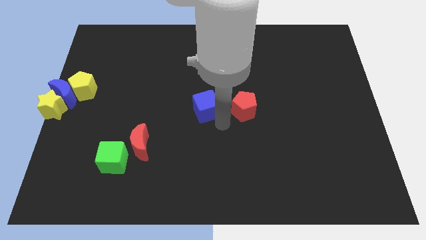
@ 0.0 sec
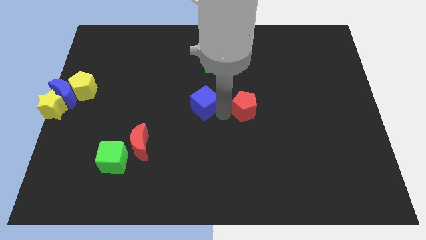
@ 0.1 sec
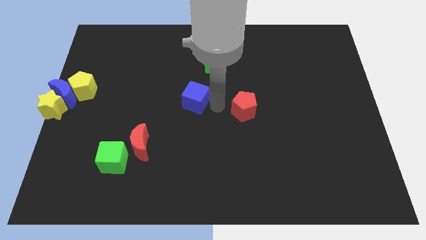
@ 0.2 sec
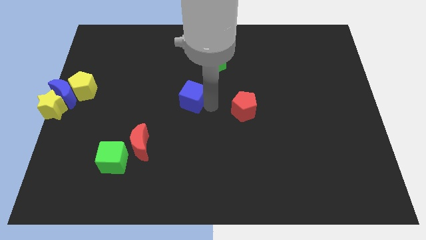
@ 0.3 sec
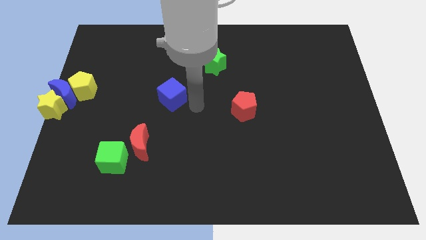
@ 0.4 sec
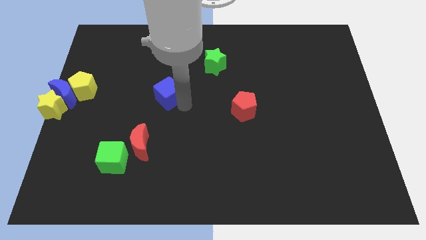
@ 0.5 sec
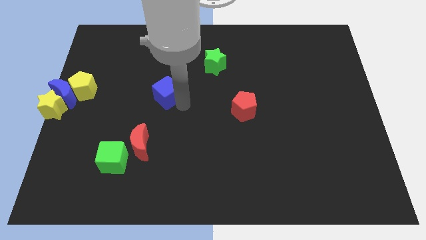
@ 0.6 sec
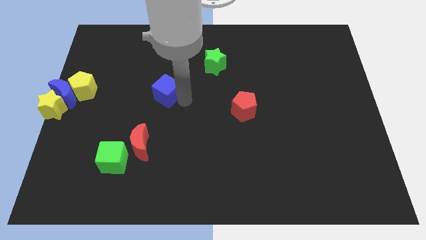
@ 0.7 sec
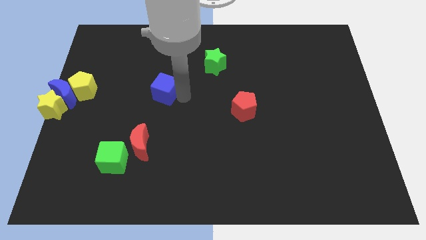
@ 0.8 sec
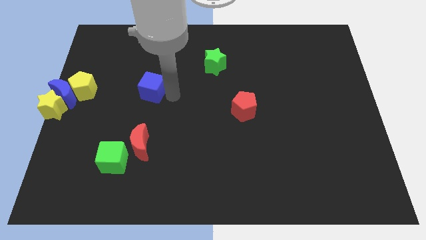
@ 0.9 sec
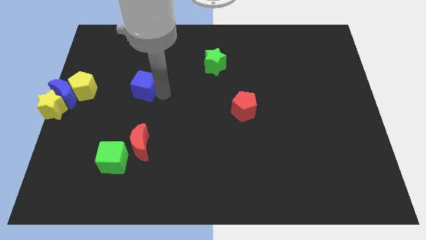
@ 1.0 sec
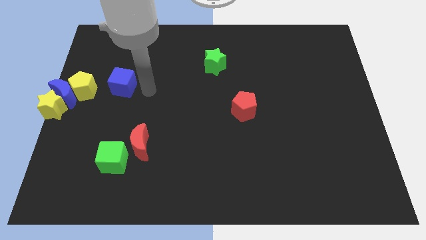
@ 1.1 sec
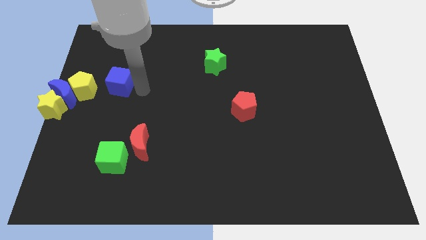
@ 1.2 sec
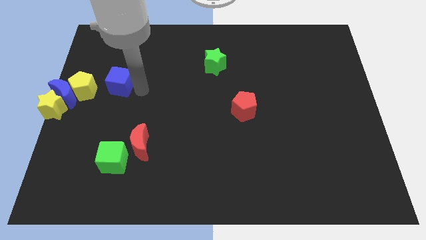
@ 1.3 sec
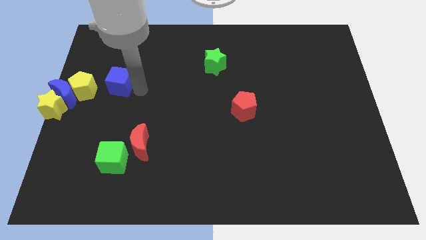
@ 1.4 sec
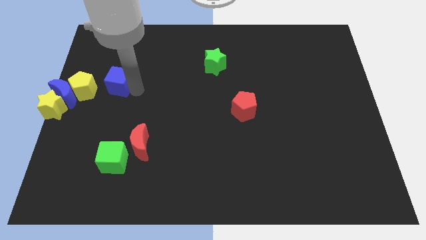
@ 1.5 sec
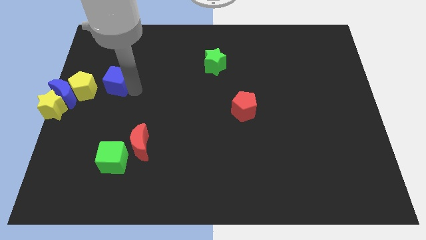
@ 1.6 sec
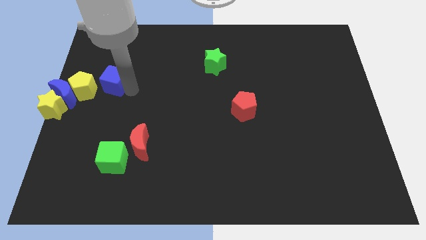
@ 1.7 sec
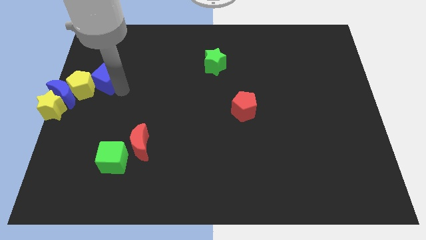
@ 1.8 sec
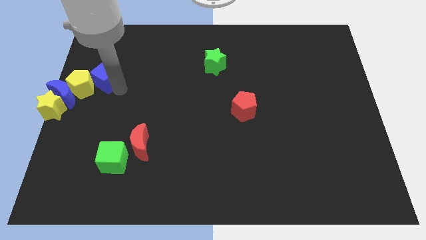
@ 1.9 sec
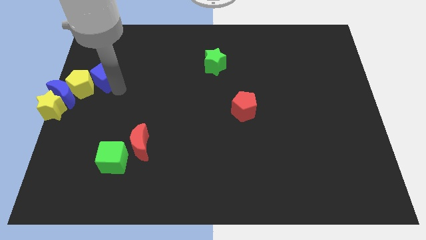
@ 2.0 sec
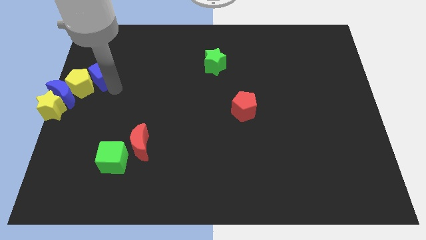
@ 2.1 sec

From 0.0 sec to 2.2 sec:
push the blue cube close to the yellow pentagon

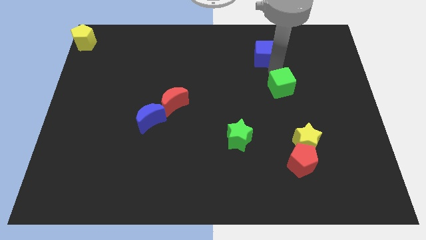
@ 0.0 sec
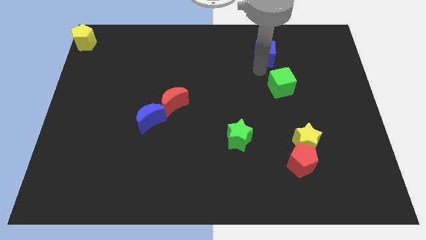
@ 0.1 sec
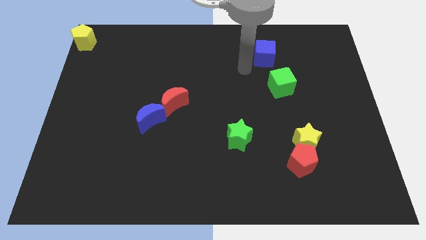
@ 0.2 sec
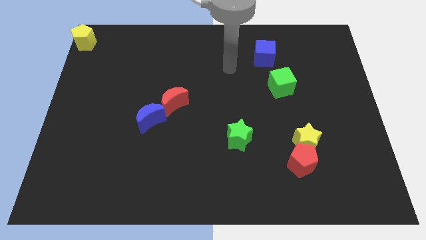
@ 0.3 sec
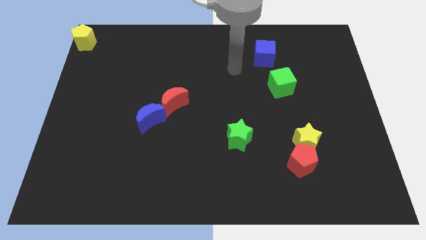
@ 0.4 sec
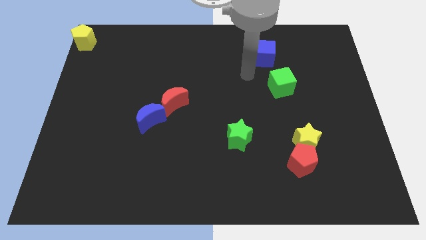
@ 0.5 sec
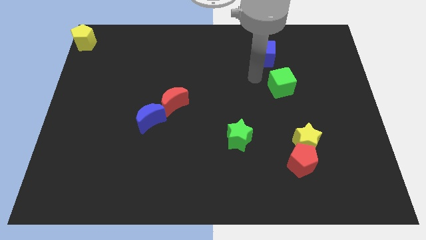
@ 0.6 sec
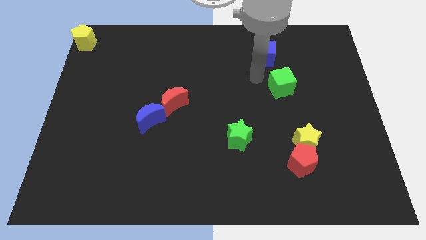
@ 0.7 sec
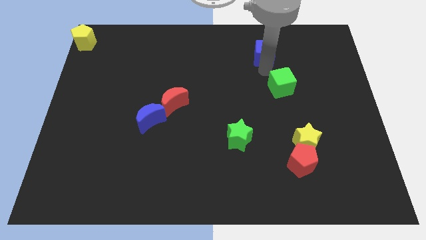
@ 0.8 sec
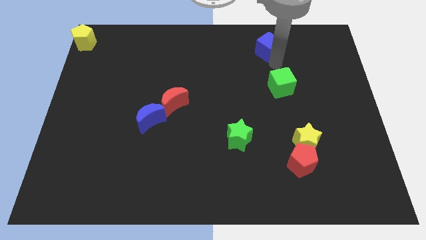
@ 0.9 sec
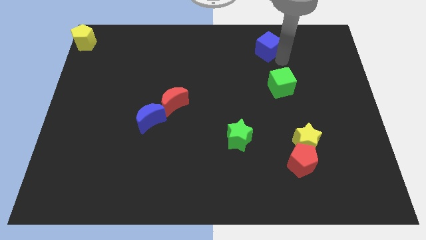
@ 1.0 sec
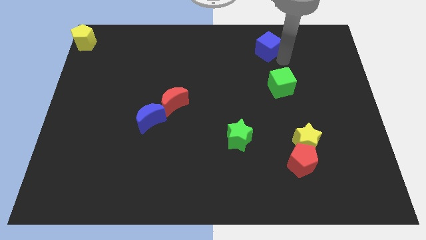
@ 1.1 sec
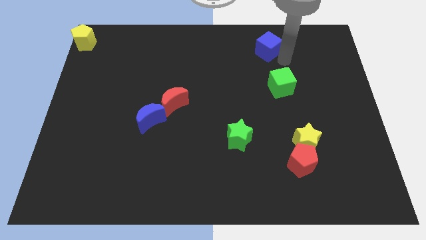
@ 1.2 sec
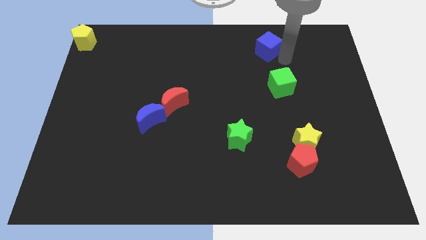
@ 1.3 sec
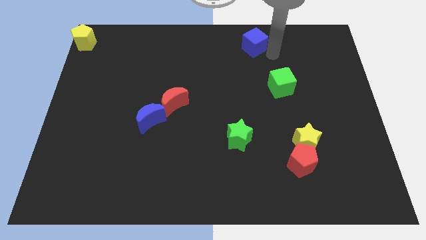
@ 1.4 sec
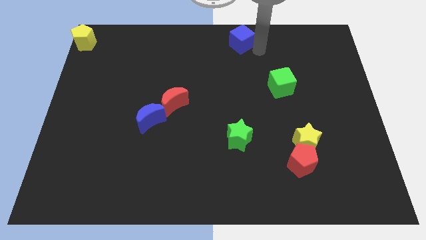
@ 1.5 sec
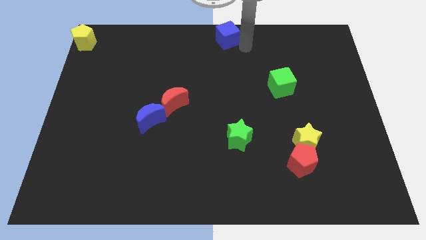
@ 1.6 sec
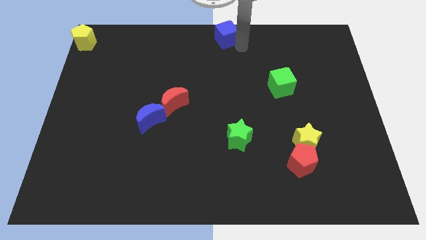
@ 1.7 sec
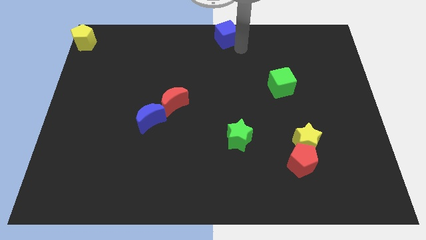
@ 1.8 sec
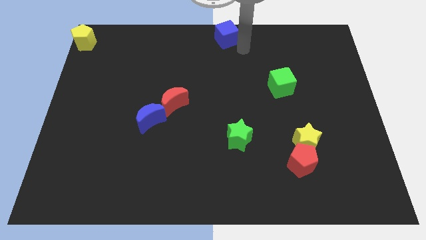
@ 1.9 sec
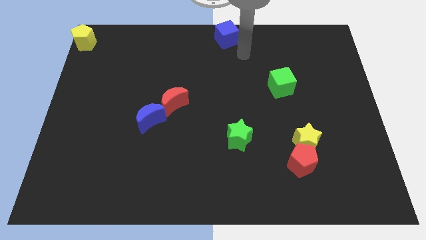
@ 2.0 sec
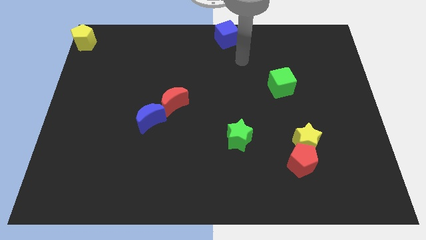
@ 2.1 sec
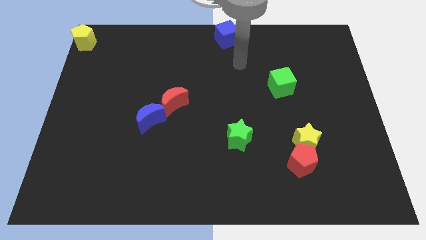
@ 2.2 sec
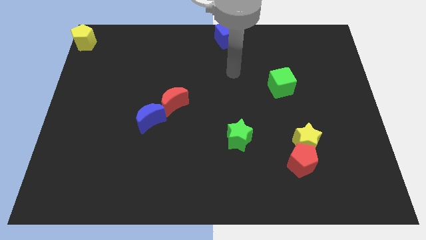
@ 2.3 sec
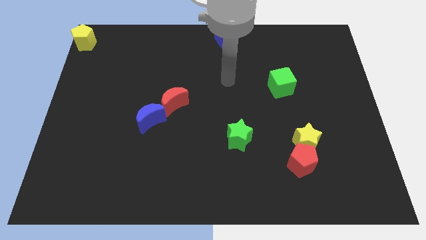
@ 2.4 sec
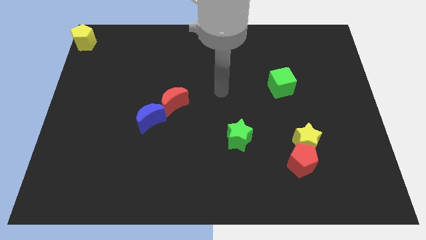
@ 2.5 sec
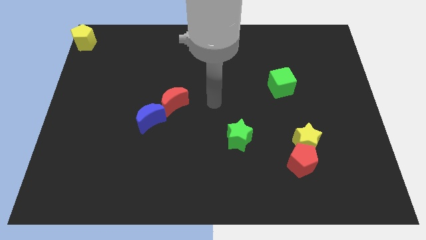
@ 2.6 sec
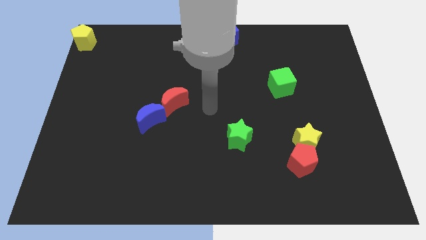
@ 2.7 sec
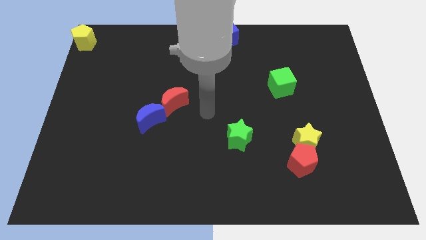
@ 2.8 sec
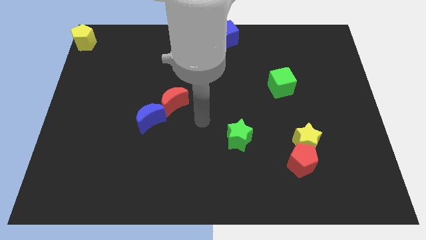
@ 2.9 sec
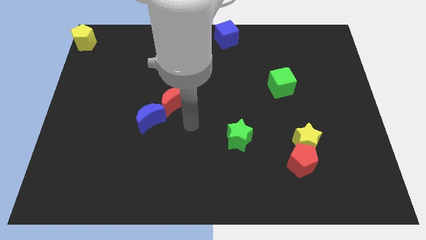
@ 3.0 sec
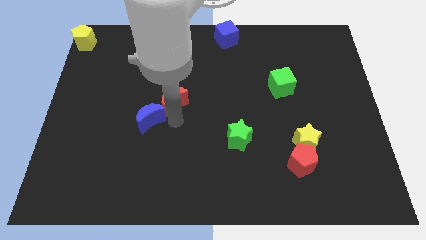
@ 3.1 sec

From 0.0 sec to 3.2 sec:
put the blue cube at the top center

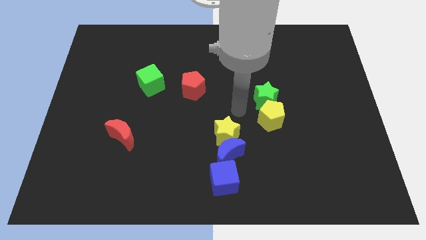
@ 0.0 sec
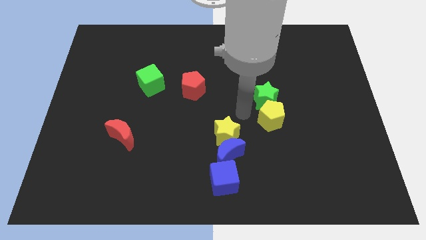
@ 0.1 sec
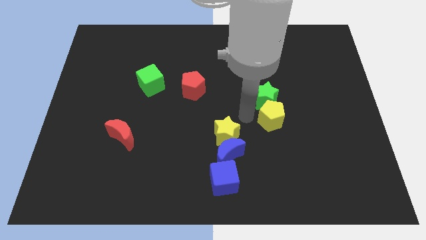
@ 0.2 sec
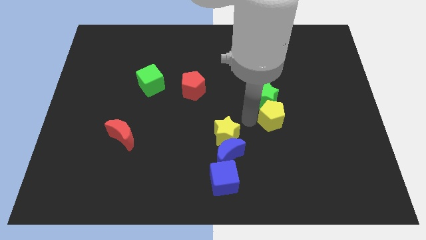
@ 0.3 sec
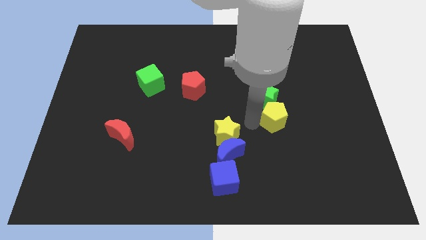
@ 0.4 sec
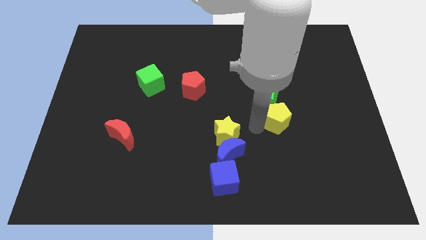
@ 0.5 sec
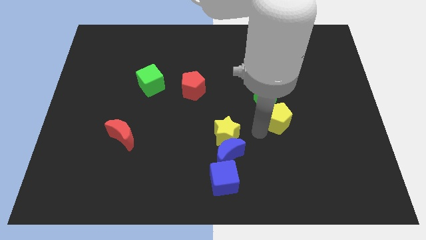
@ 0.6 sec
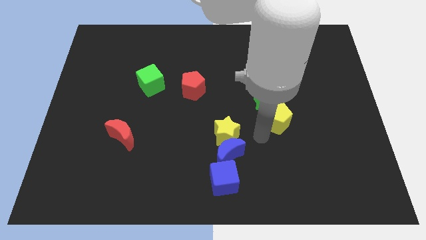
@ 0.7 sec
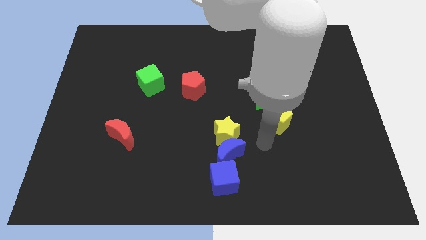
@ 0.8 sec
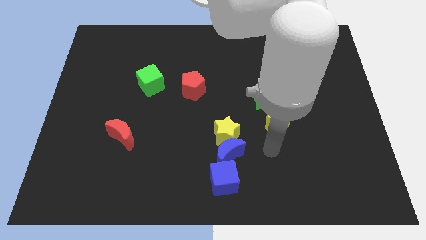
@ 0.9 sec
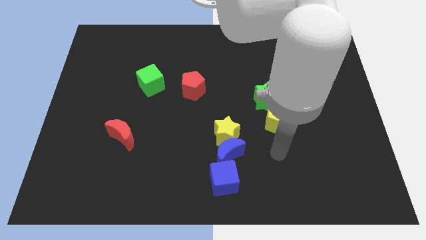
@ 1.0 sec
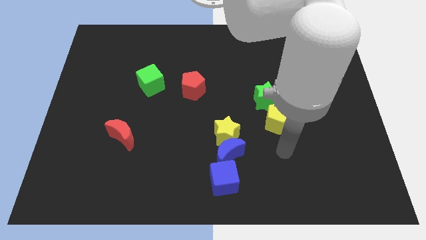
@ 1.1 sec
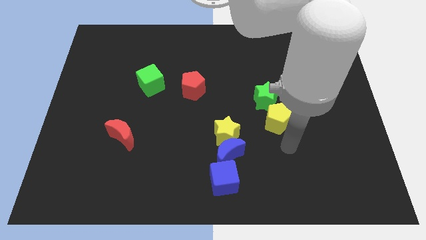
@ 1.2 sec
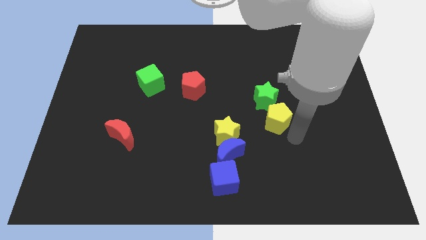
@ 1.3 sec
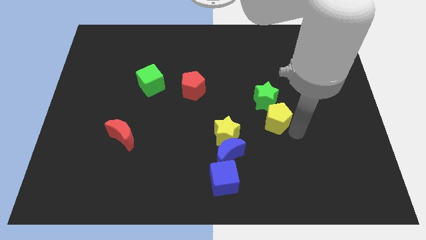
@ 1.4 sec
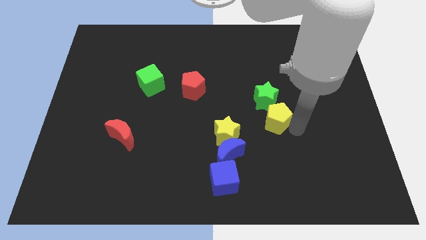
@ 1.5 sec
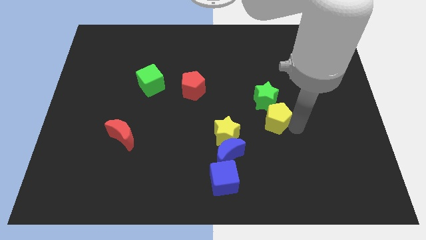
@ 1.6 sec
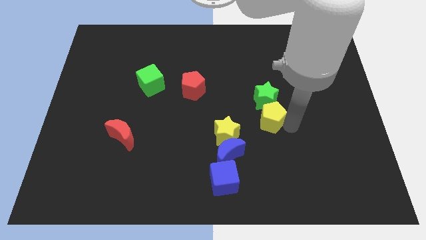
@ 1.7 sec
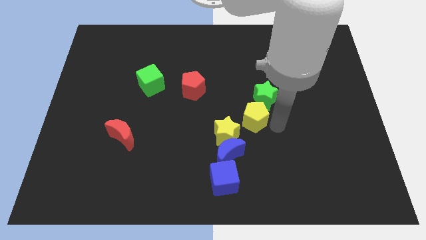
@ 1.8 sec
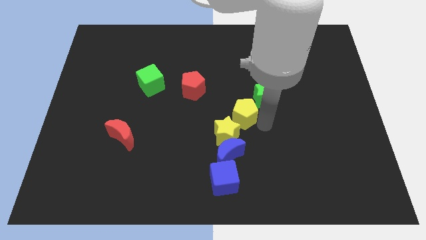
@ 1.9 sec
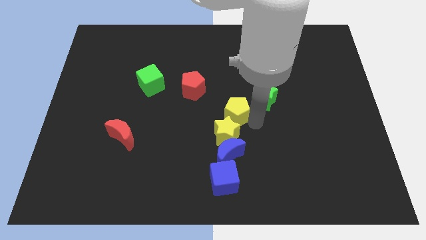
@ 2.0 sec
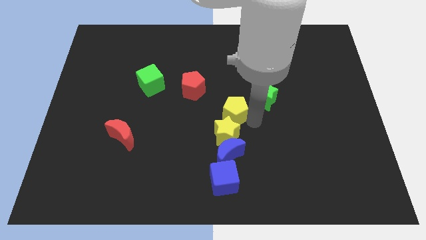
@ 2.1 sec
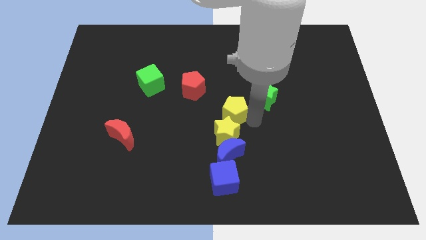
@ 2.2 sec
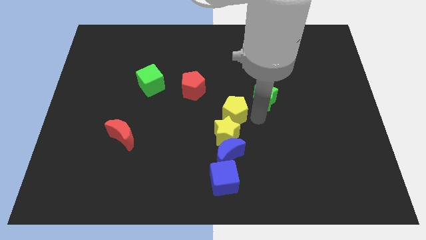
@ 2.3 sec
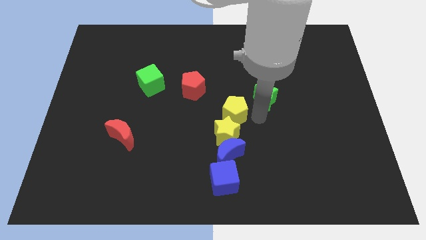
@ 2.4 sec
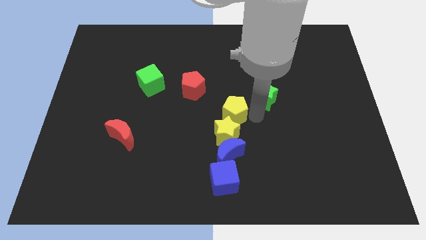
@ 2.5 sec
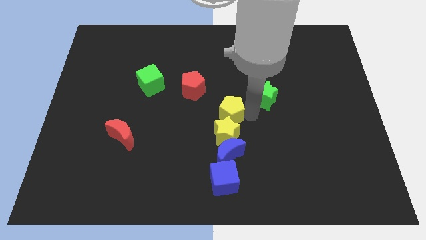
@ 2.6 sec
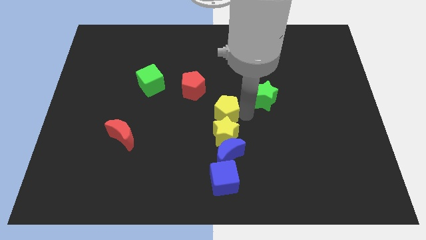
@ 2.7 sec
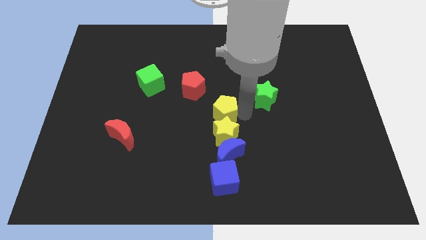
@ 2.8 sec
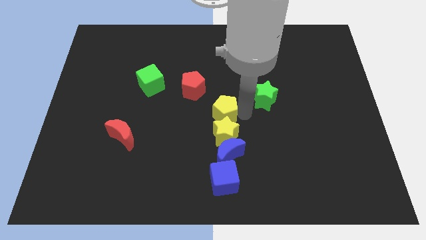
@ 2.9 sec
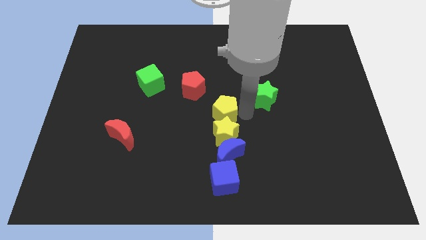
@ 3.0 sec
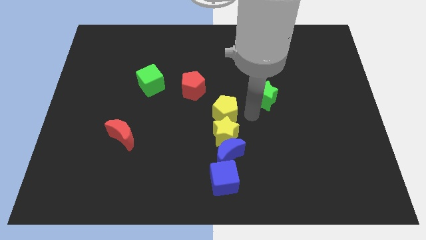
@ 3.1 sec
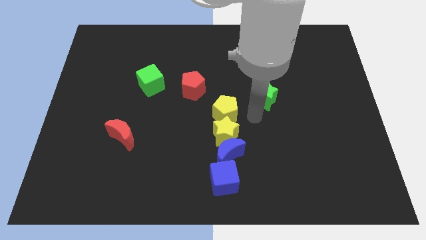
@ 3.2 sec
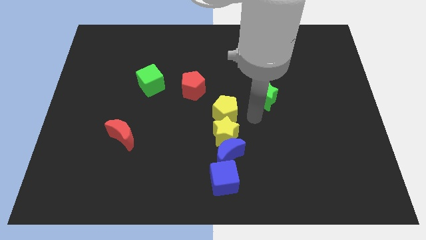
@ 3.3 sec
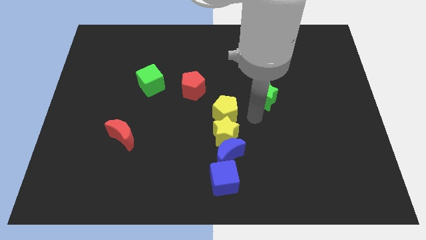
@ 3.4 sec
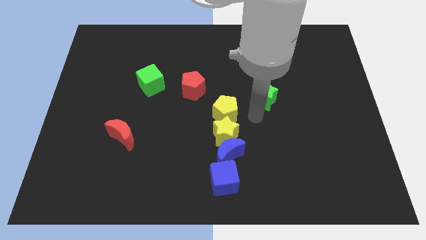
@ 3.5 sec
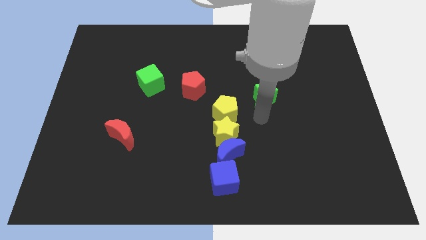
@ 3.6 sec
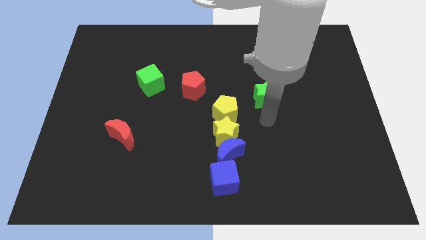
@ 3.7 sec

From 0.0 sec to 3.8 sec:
place the yellow pentagon on top of the yellow star
